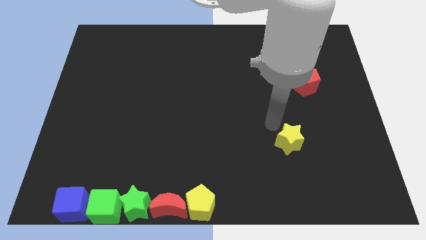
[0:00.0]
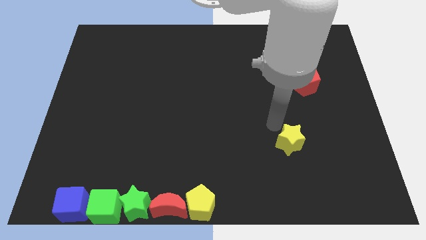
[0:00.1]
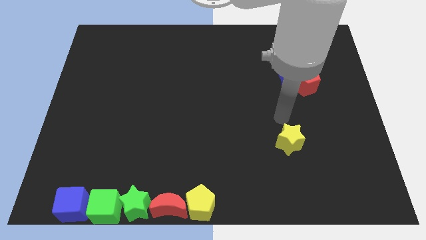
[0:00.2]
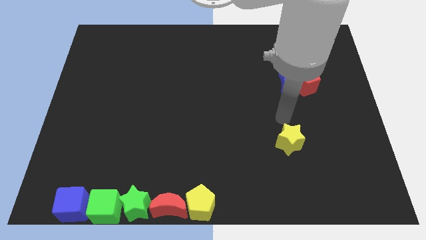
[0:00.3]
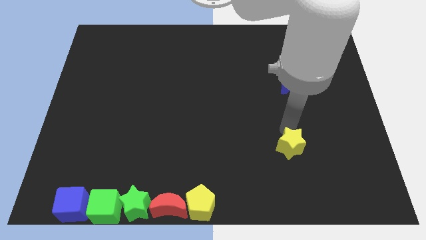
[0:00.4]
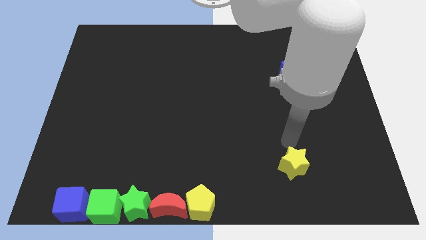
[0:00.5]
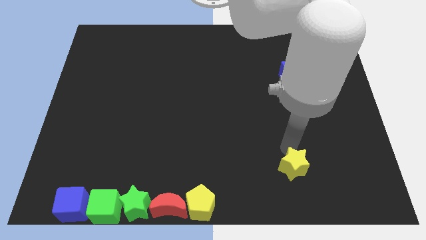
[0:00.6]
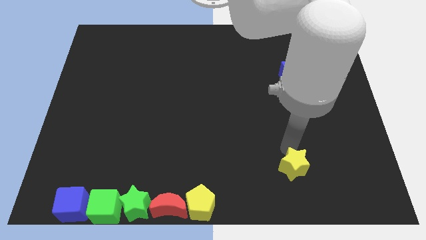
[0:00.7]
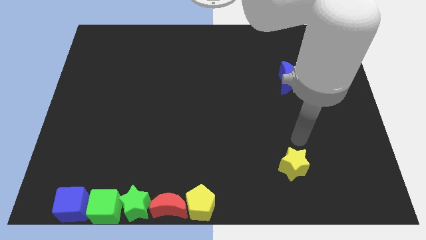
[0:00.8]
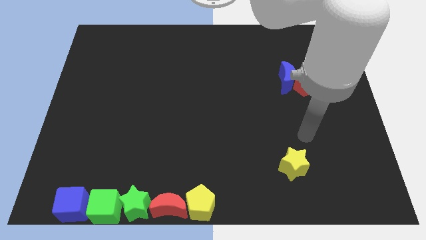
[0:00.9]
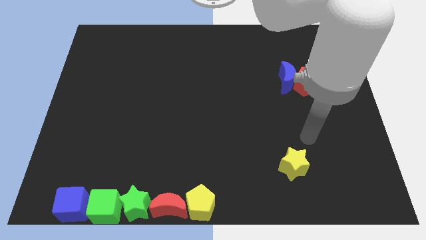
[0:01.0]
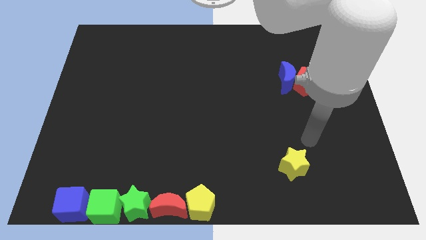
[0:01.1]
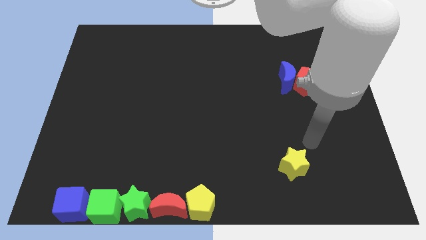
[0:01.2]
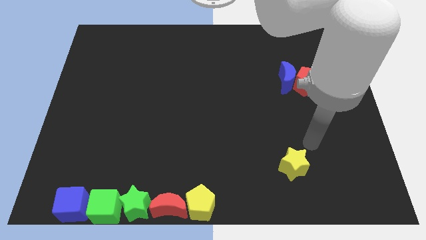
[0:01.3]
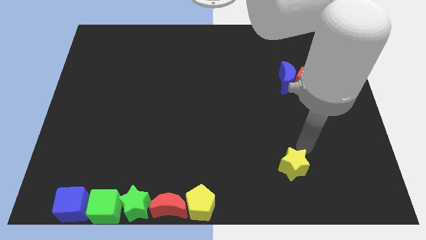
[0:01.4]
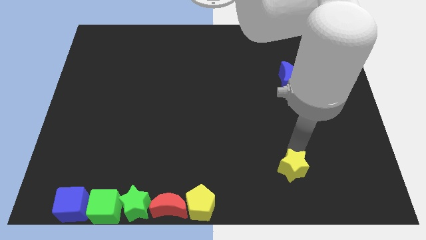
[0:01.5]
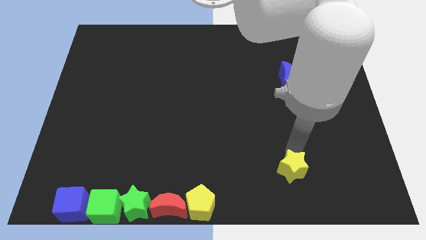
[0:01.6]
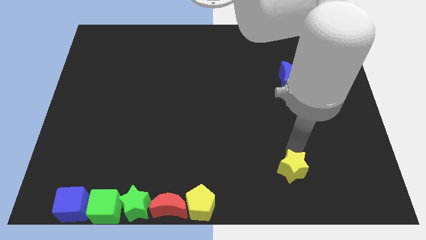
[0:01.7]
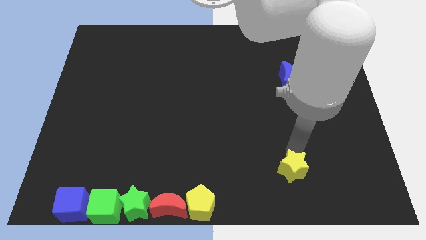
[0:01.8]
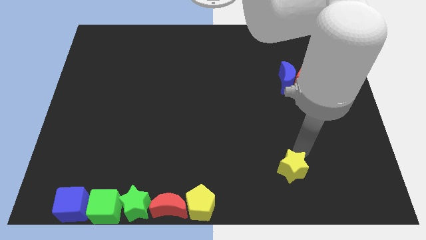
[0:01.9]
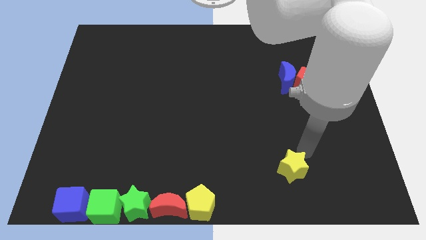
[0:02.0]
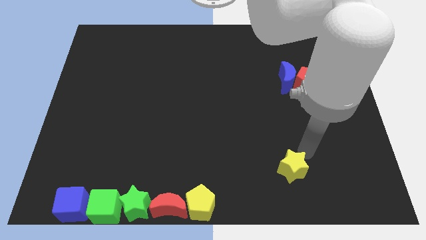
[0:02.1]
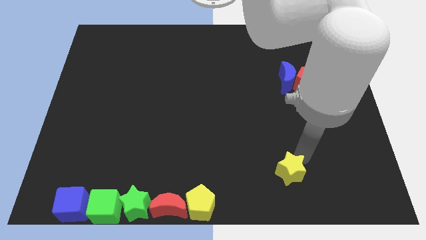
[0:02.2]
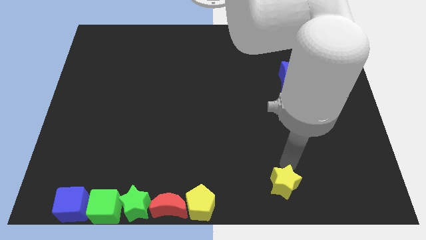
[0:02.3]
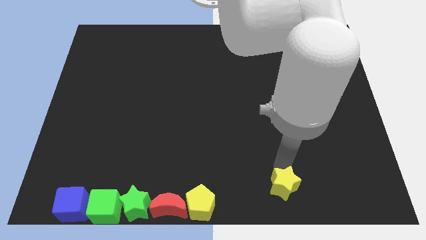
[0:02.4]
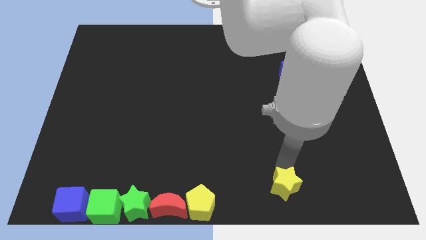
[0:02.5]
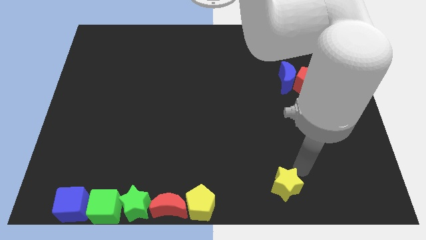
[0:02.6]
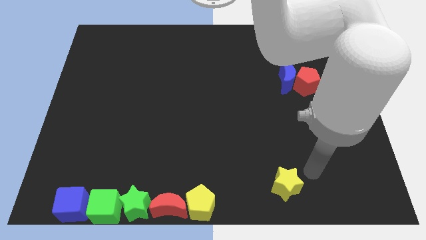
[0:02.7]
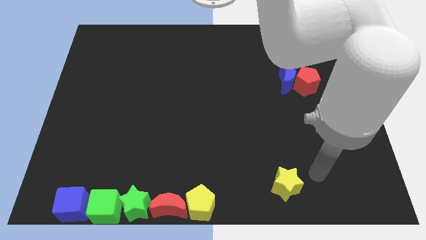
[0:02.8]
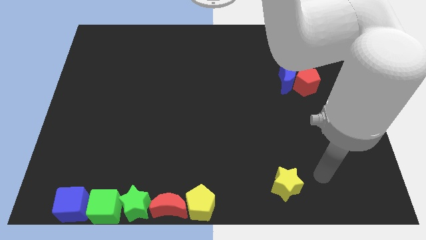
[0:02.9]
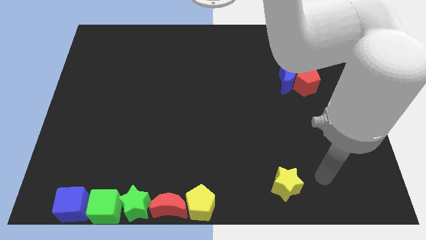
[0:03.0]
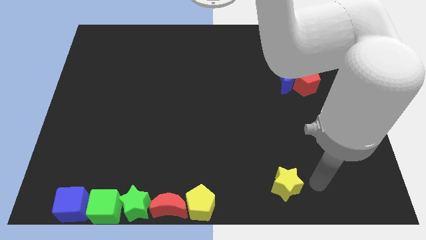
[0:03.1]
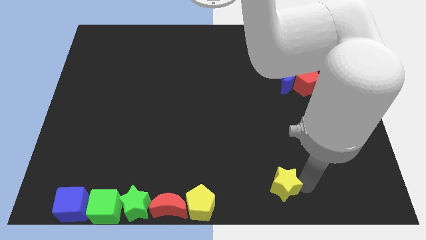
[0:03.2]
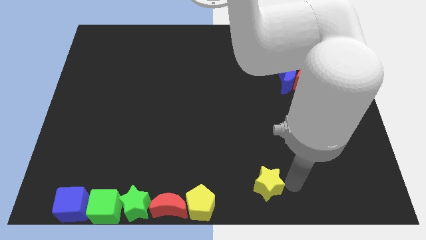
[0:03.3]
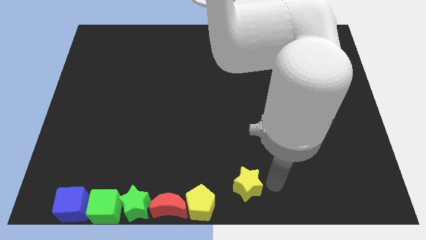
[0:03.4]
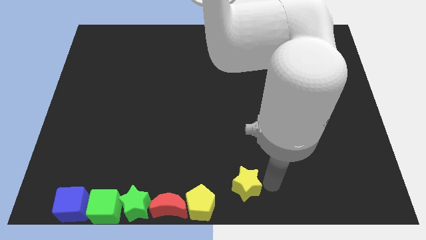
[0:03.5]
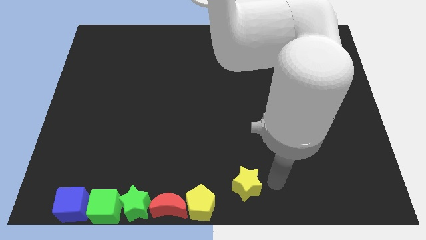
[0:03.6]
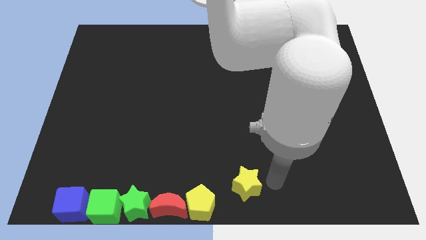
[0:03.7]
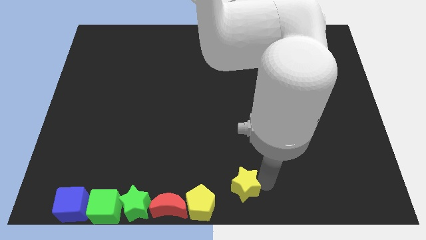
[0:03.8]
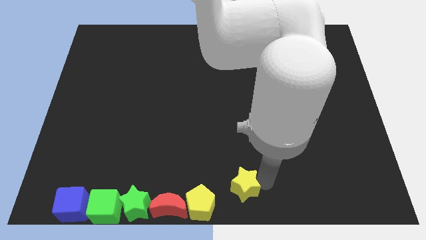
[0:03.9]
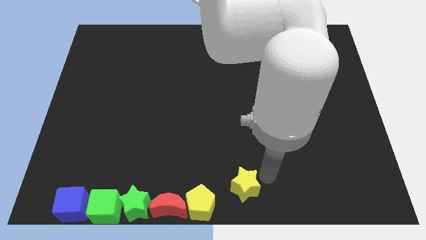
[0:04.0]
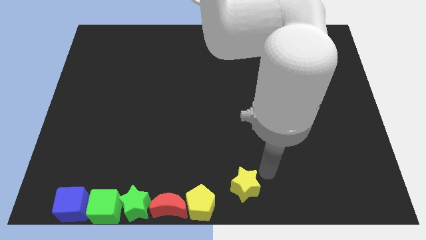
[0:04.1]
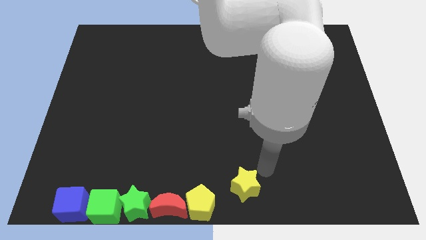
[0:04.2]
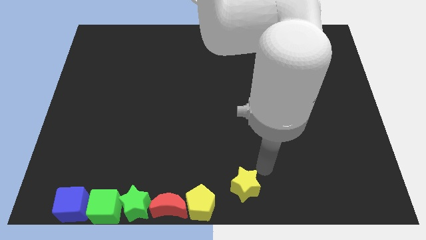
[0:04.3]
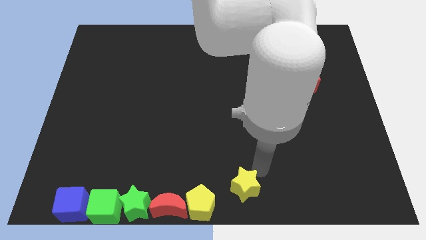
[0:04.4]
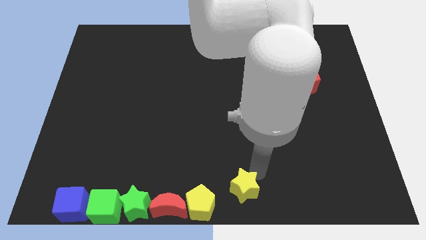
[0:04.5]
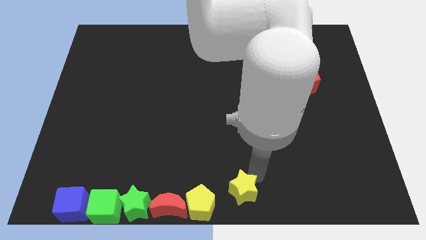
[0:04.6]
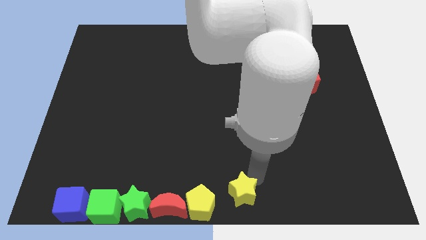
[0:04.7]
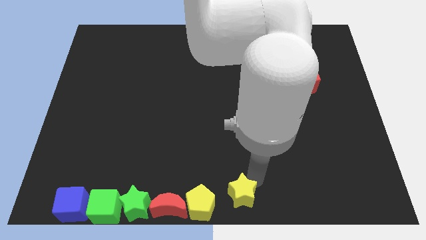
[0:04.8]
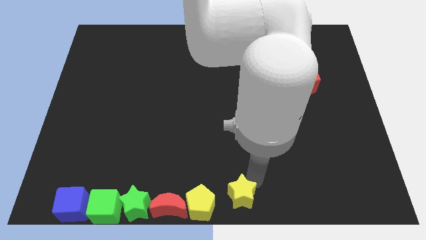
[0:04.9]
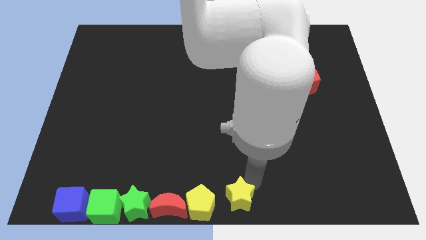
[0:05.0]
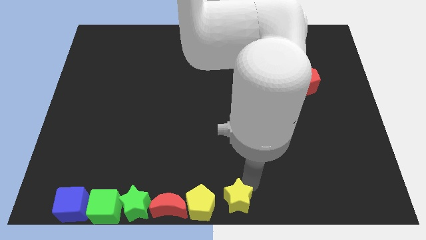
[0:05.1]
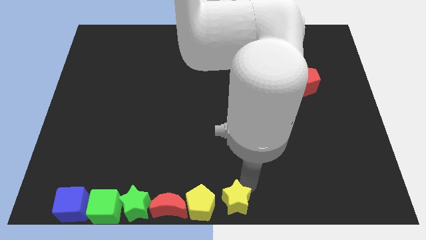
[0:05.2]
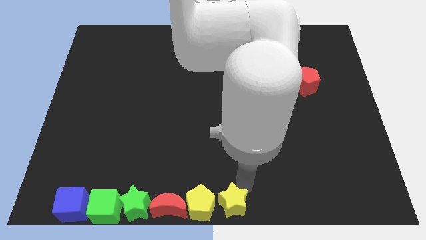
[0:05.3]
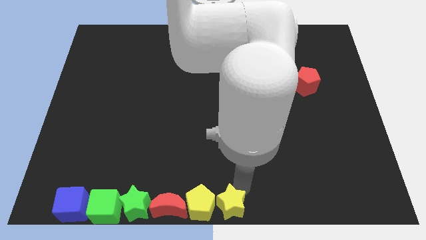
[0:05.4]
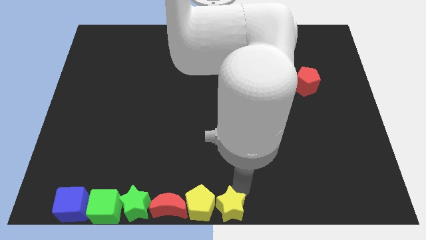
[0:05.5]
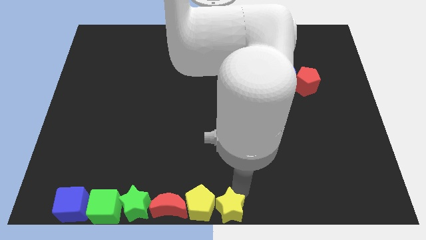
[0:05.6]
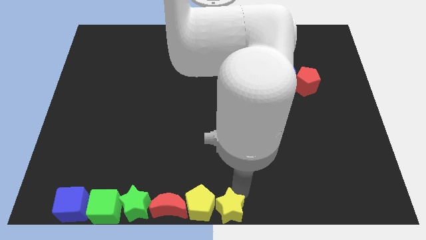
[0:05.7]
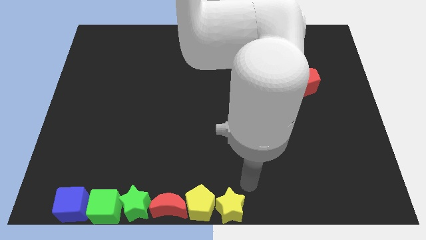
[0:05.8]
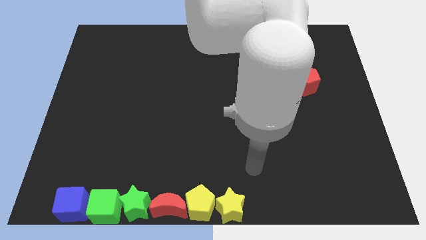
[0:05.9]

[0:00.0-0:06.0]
move the yellow star to the right of the yellow pentagon

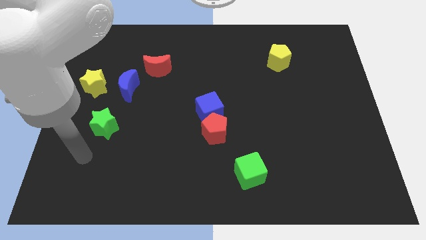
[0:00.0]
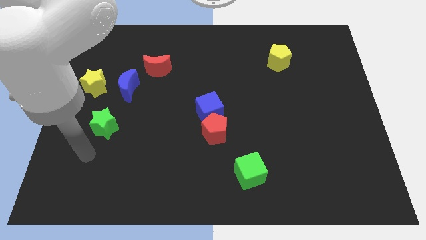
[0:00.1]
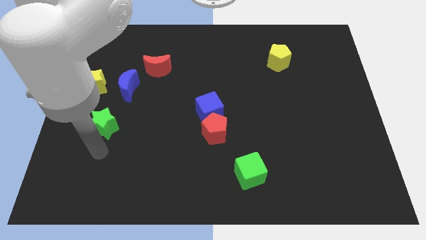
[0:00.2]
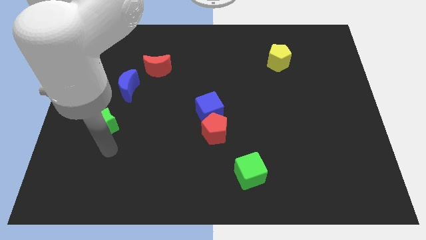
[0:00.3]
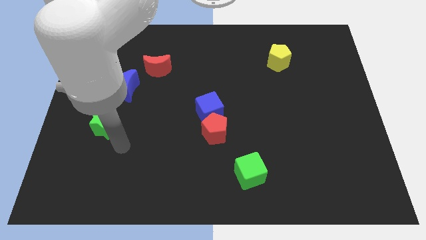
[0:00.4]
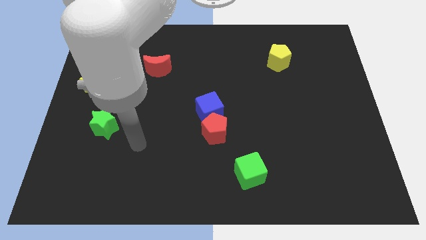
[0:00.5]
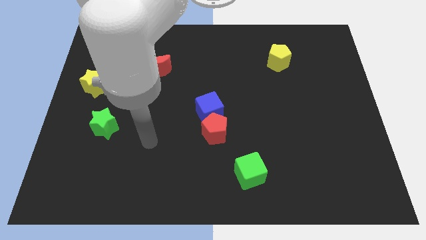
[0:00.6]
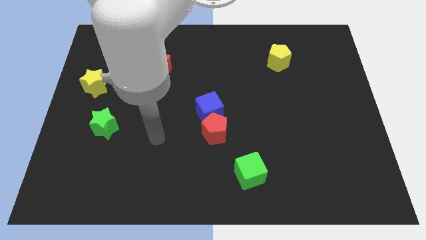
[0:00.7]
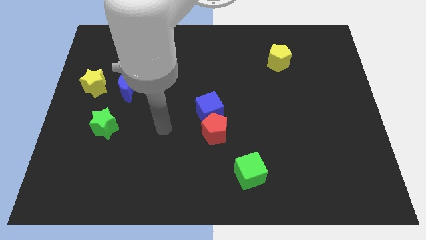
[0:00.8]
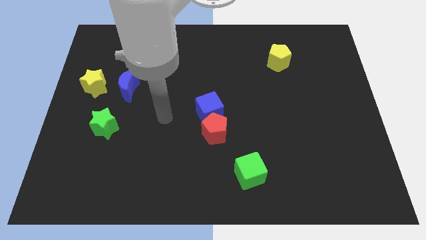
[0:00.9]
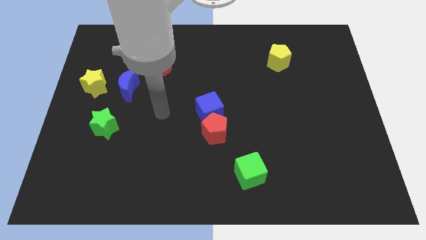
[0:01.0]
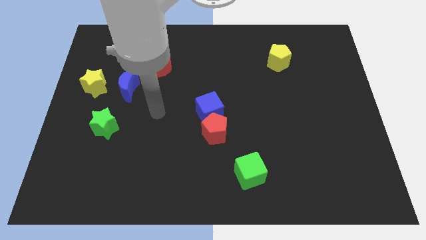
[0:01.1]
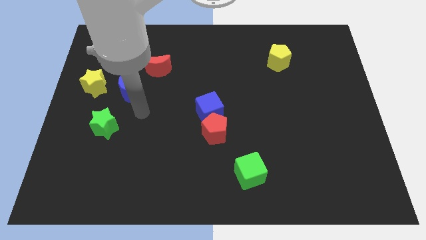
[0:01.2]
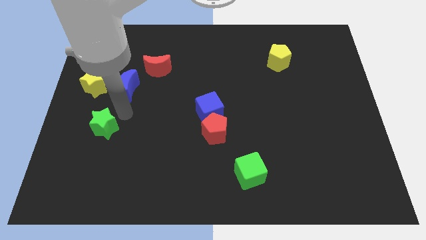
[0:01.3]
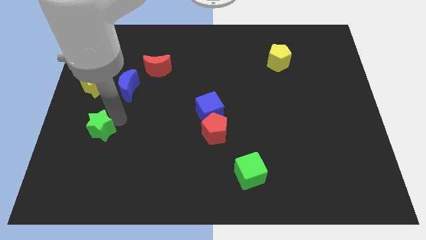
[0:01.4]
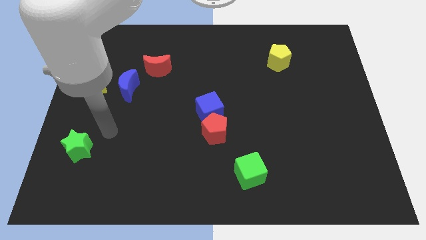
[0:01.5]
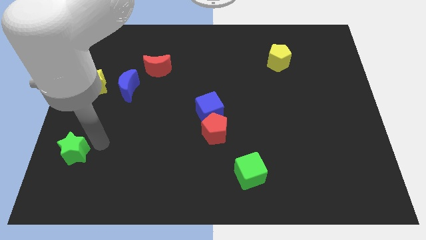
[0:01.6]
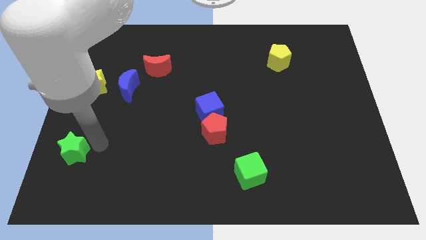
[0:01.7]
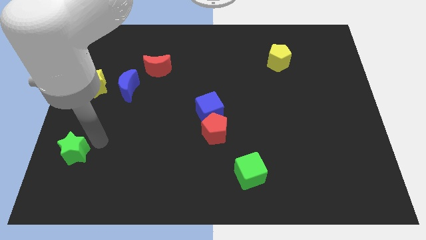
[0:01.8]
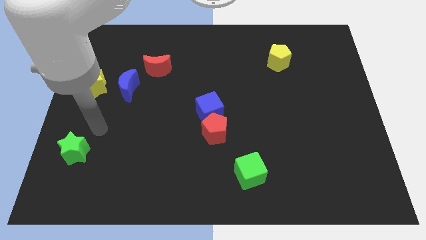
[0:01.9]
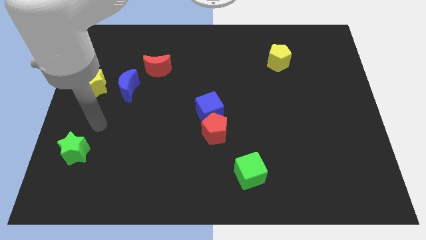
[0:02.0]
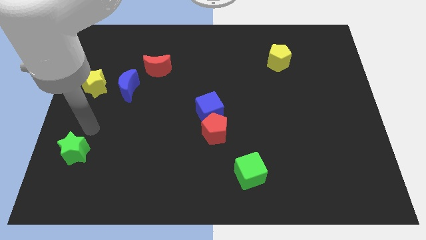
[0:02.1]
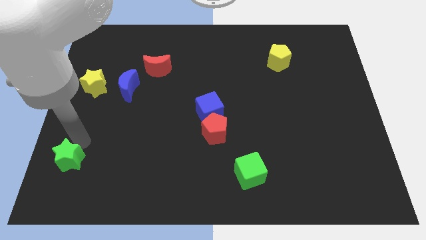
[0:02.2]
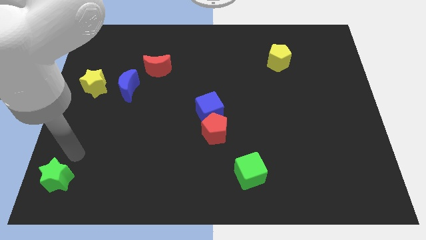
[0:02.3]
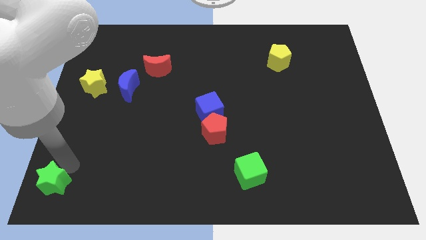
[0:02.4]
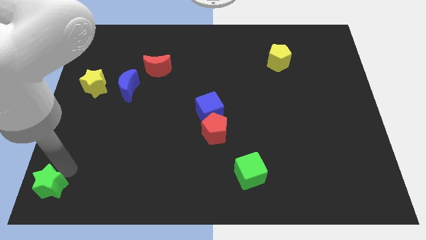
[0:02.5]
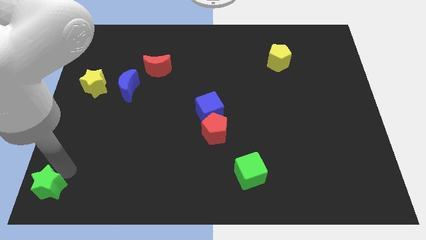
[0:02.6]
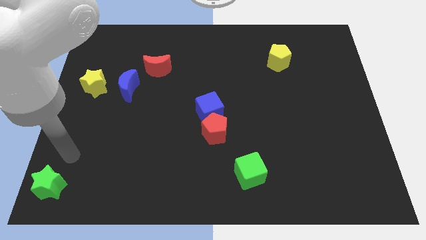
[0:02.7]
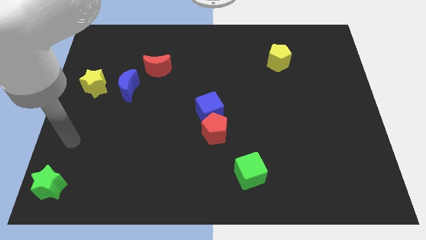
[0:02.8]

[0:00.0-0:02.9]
place the green star at the bottom left
